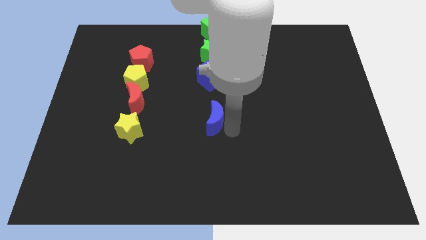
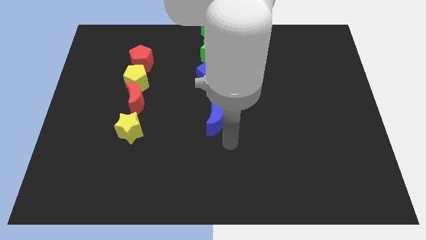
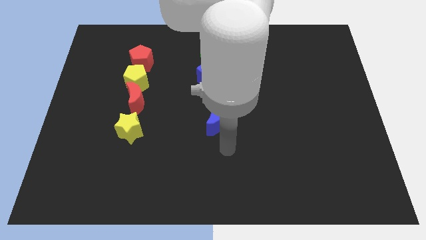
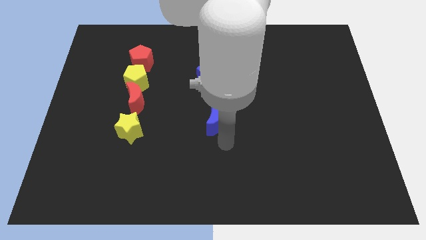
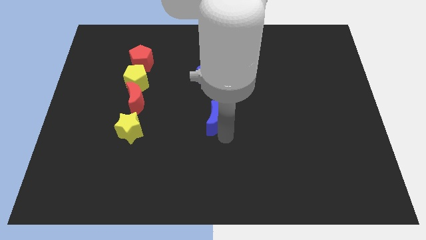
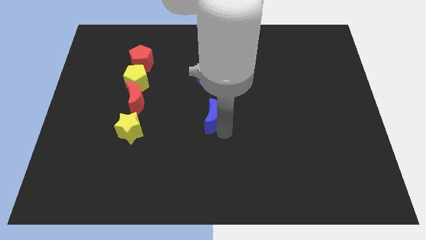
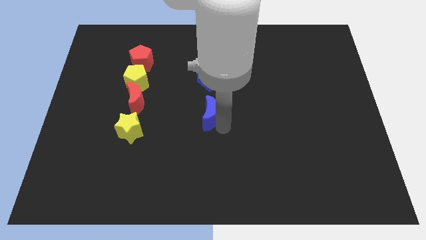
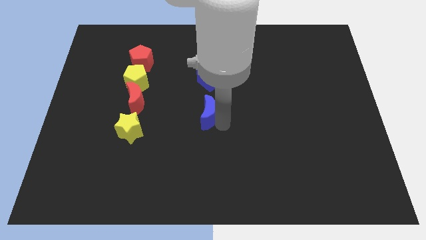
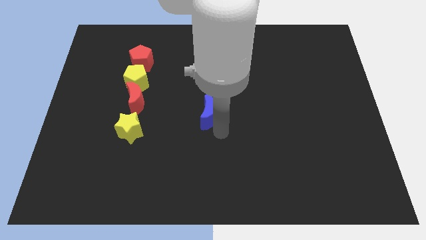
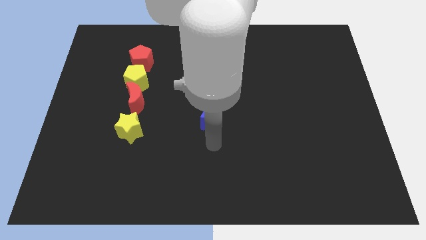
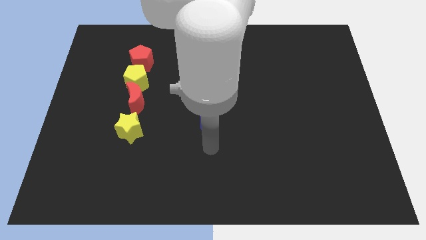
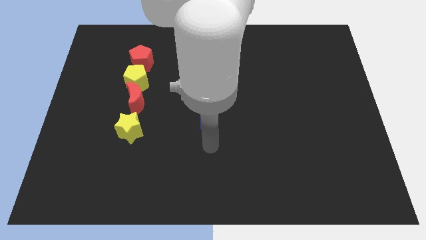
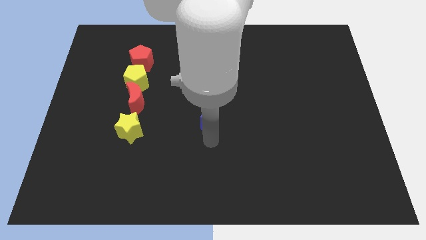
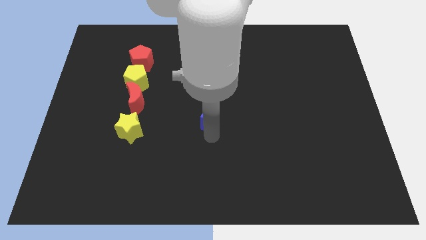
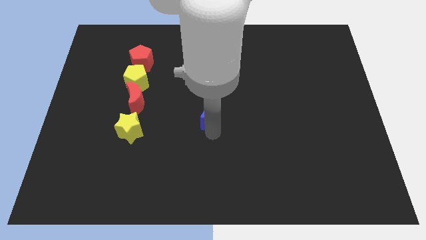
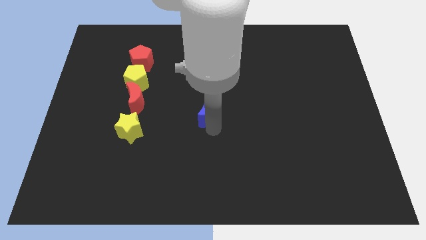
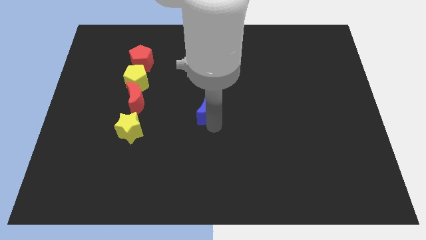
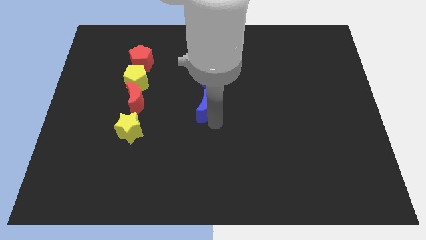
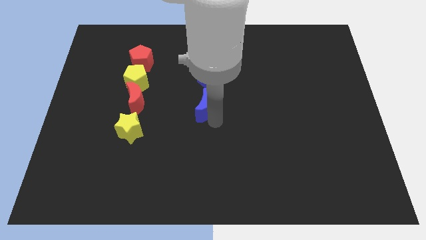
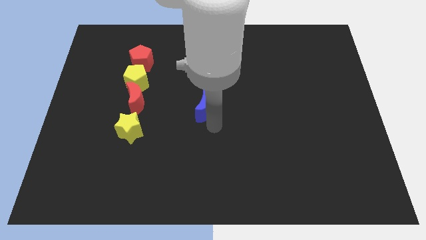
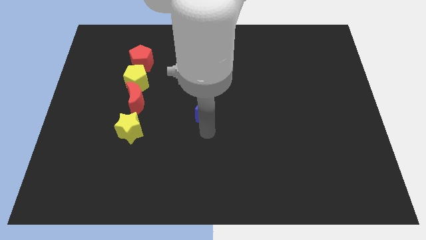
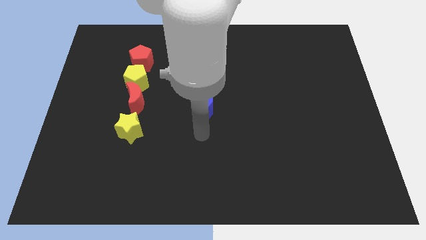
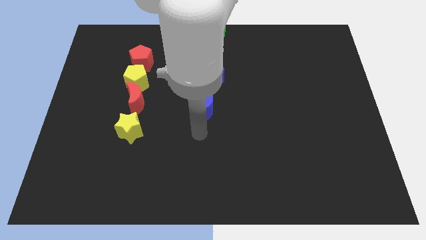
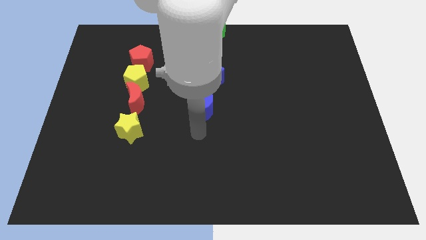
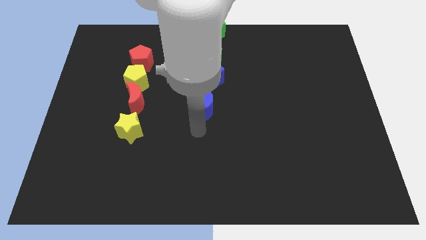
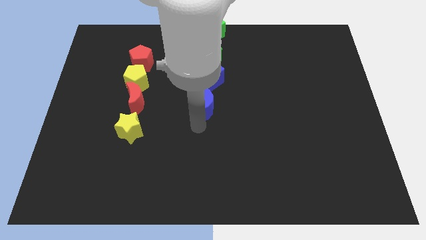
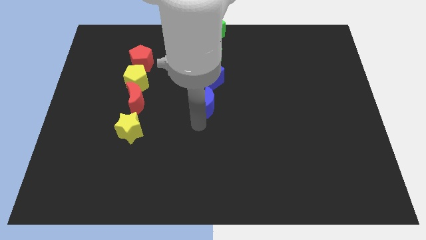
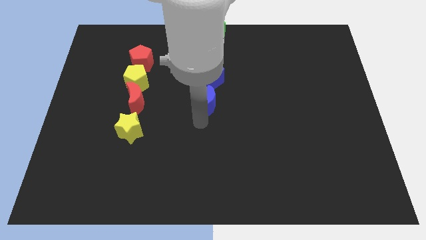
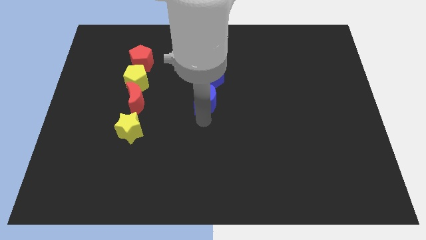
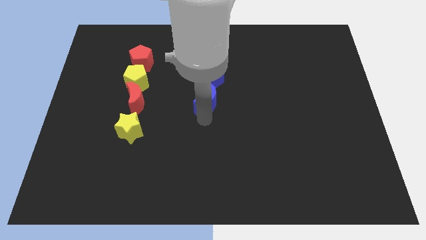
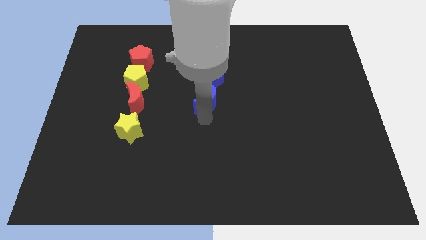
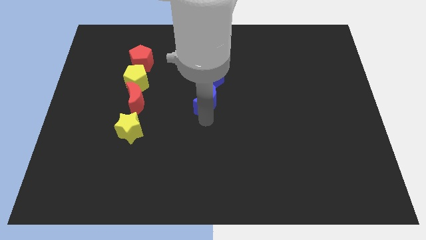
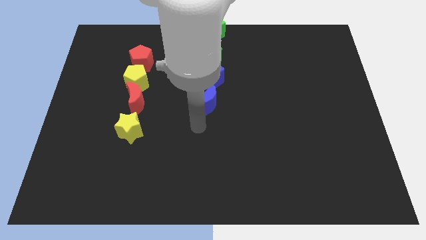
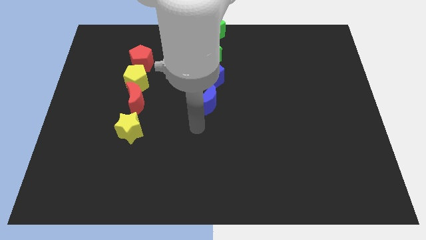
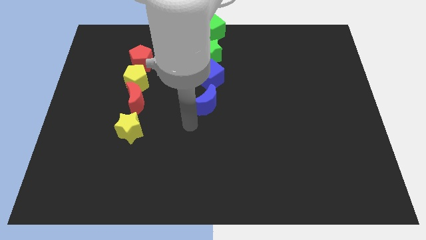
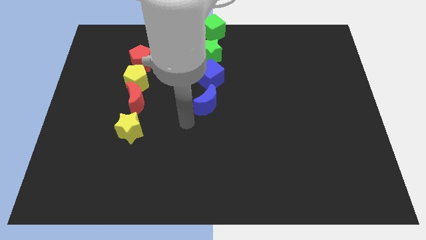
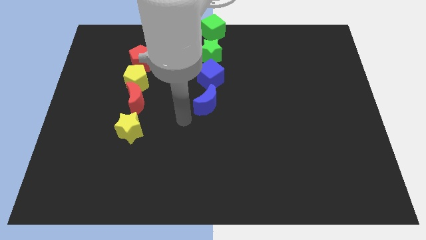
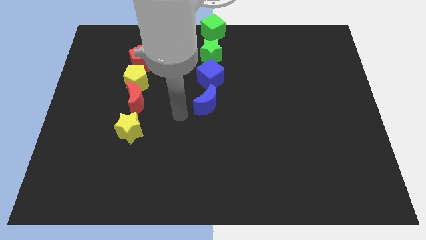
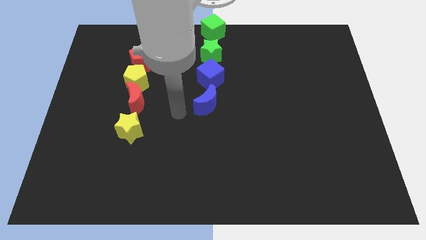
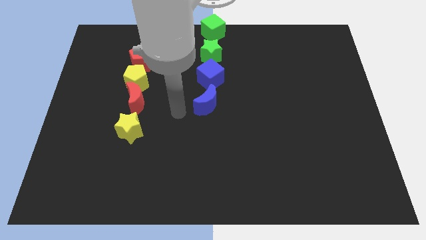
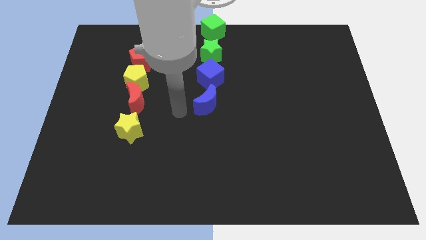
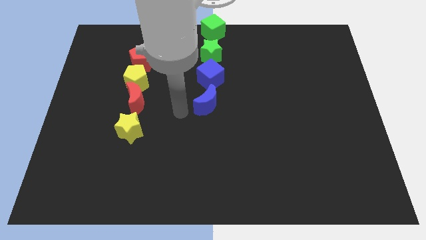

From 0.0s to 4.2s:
push blue crescent slightly towards the blue cube

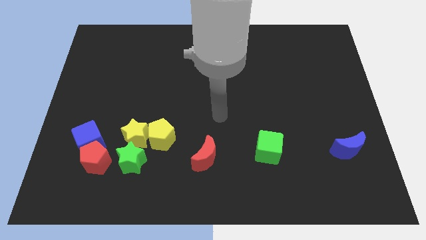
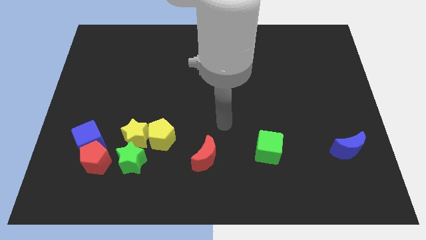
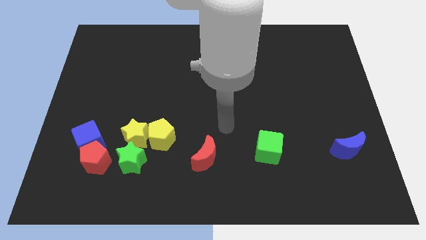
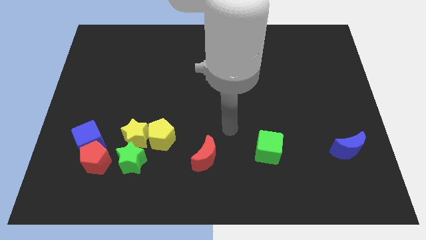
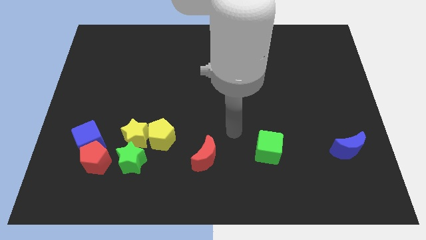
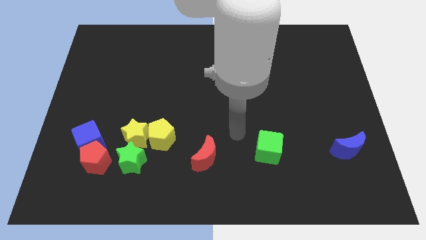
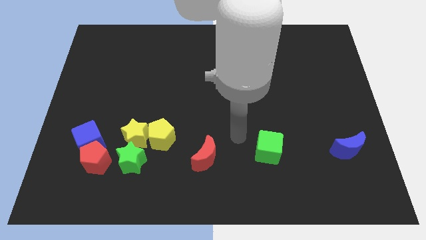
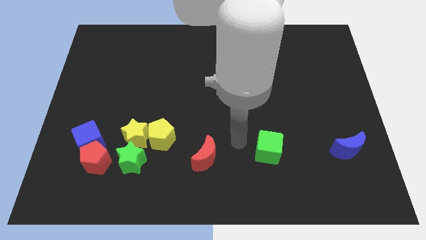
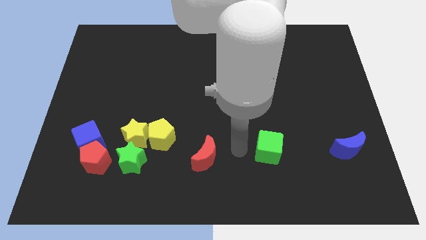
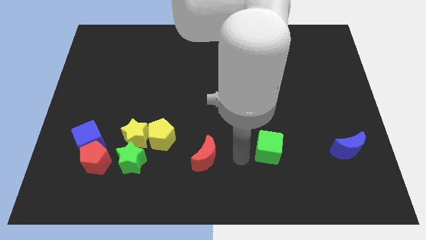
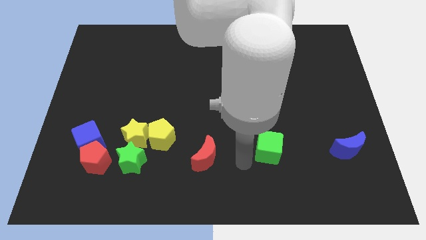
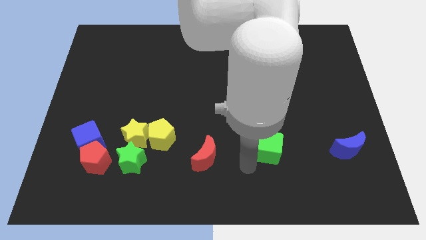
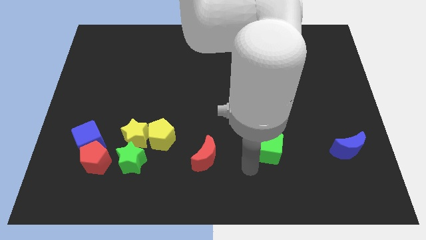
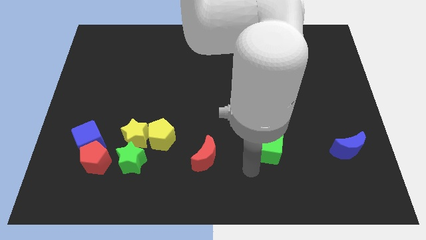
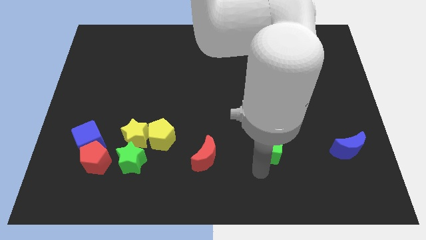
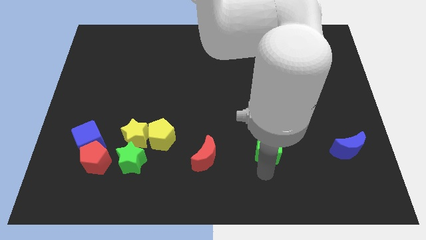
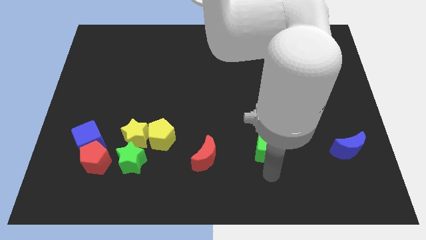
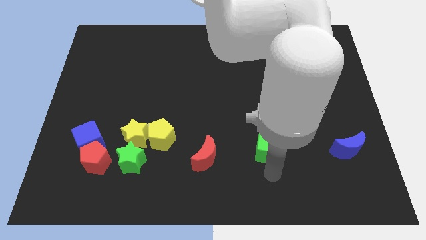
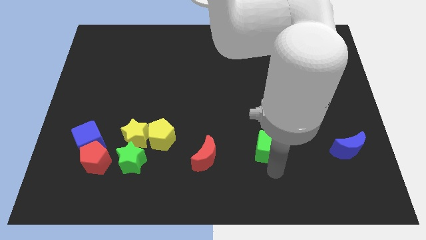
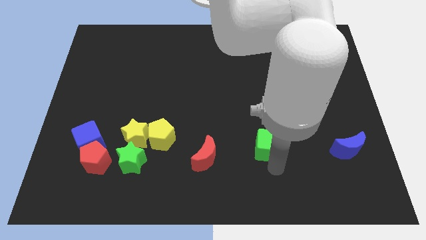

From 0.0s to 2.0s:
move the arm close to the green cube

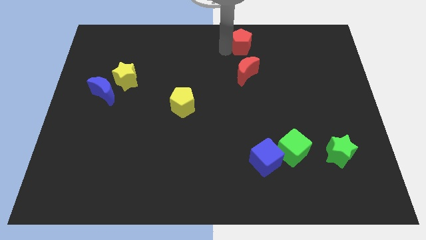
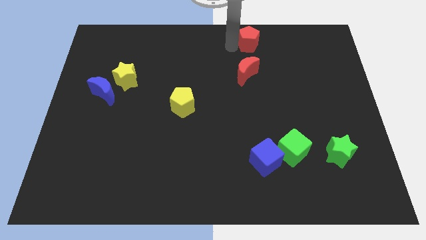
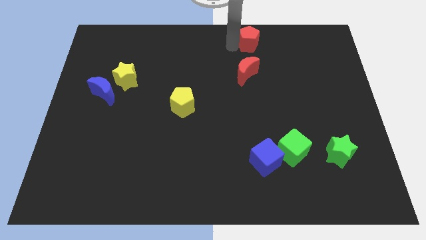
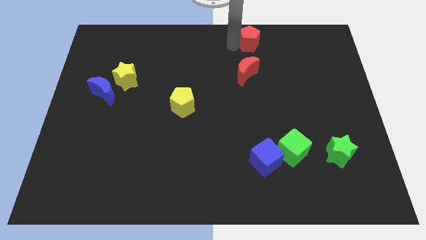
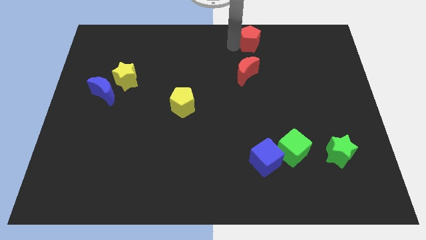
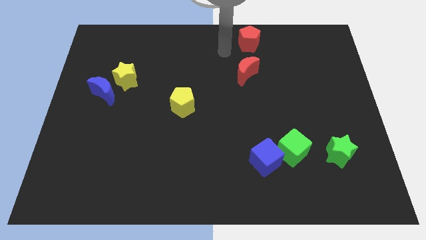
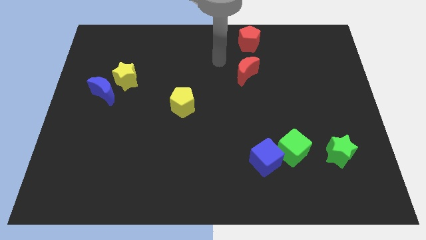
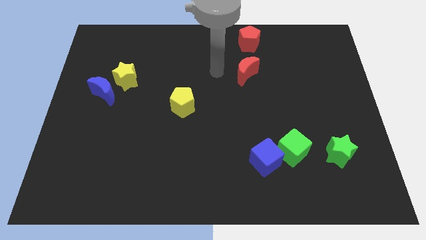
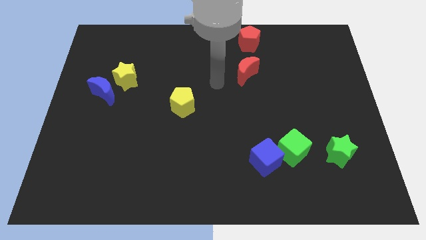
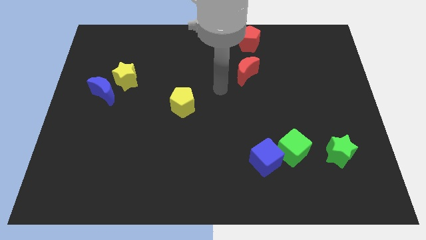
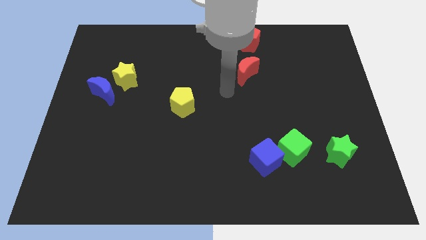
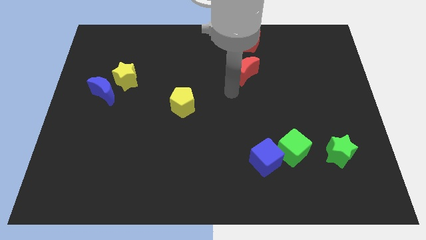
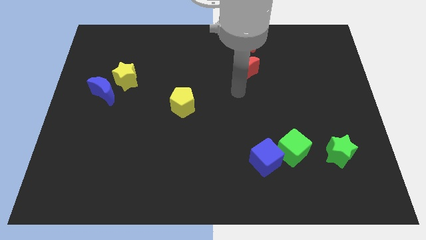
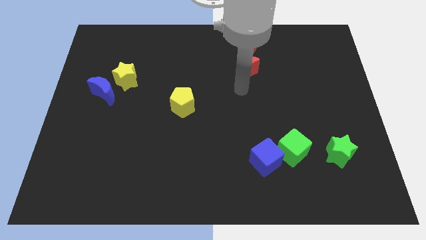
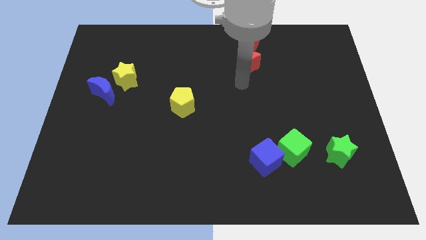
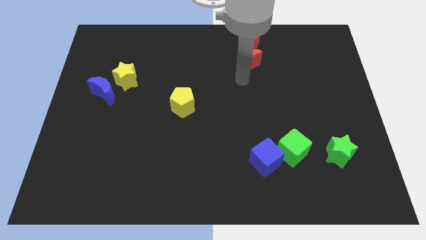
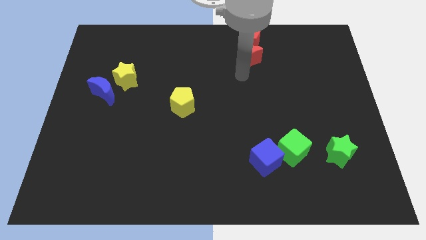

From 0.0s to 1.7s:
place the red moon below the red pentagon

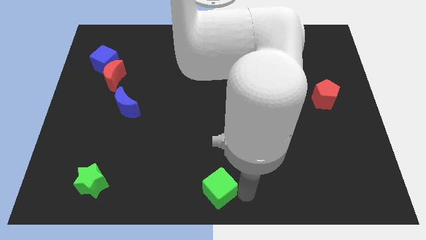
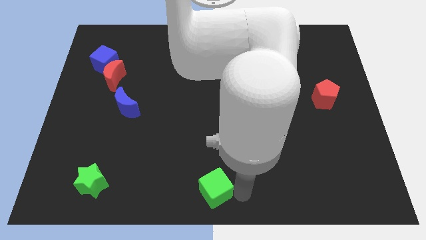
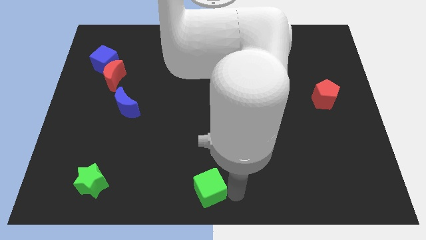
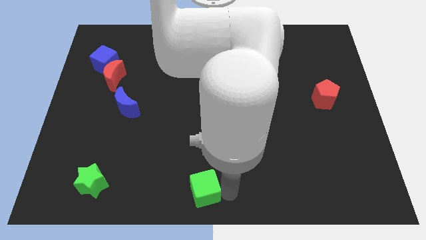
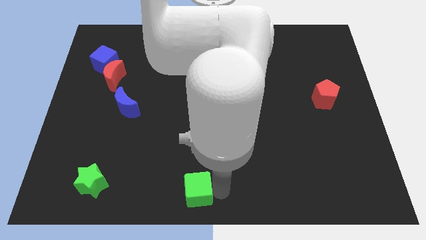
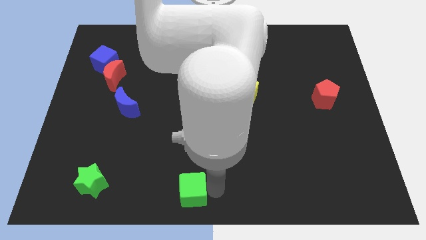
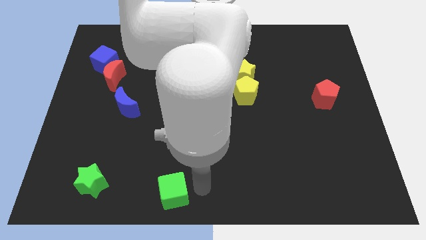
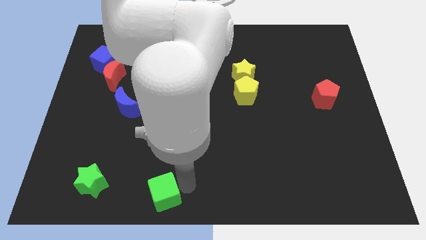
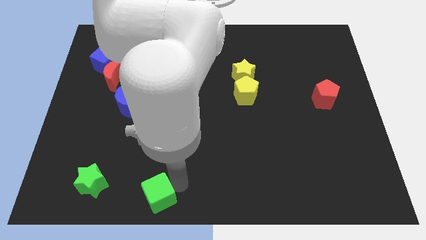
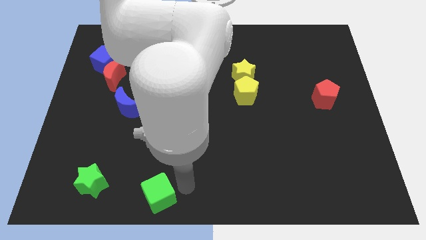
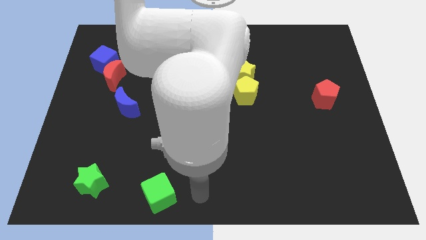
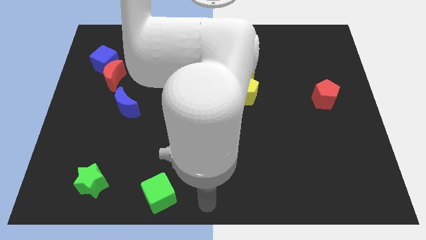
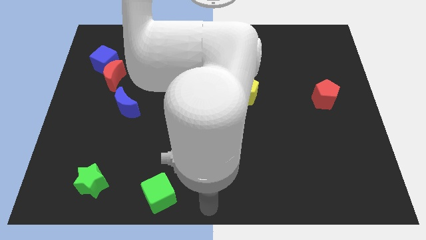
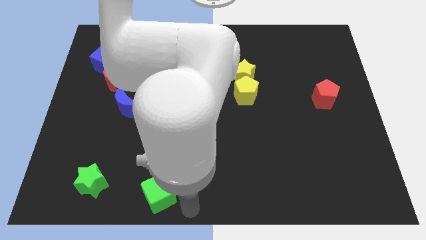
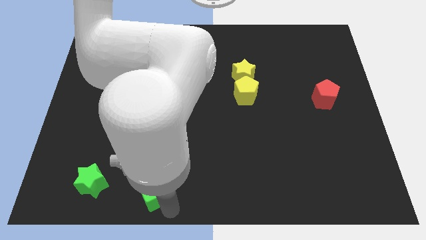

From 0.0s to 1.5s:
move the green cube towards the bottom left
